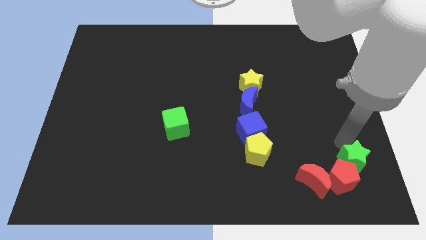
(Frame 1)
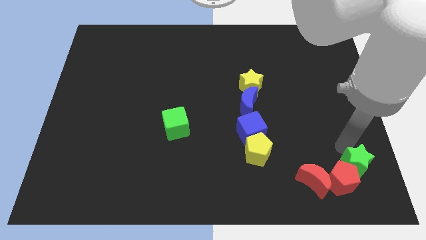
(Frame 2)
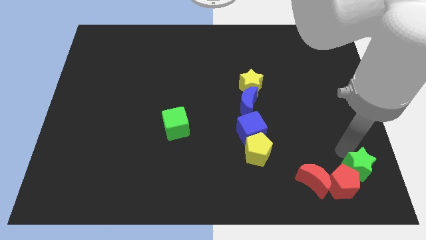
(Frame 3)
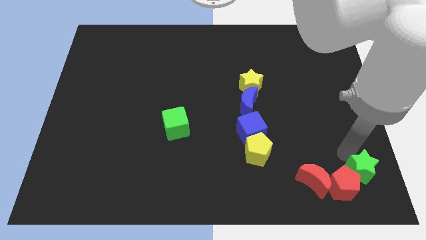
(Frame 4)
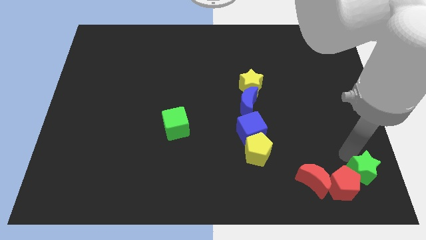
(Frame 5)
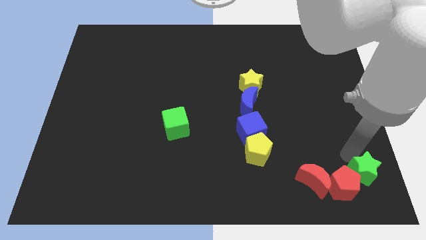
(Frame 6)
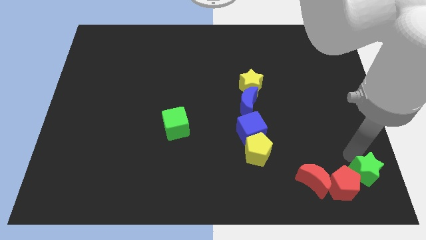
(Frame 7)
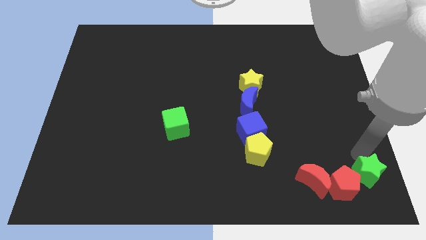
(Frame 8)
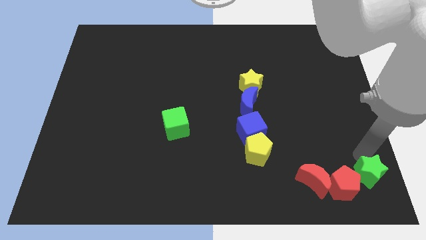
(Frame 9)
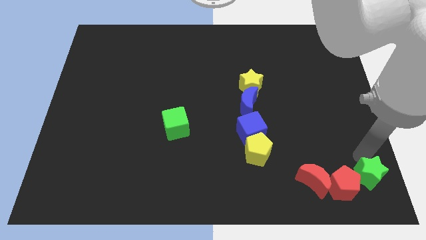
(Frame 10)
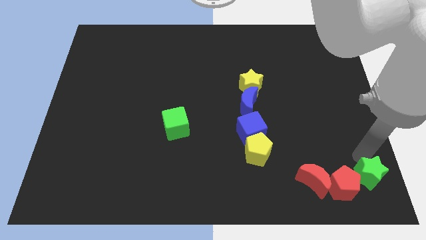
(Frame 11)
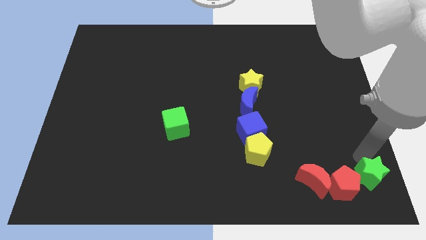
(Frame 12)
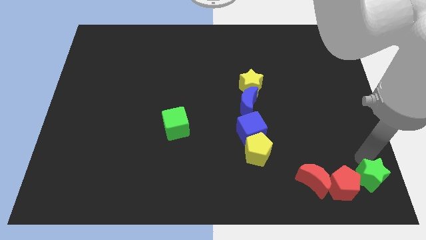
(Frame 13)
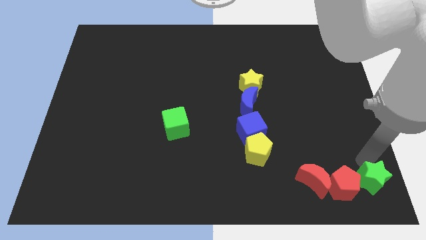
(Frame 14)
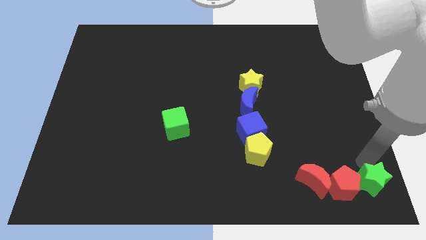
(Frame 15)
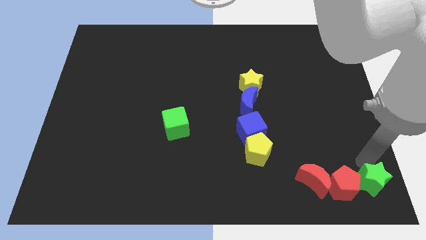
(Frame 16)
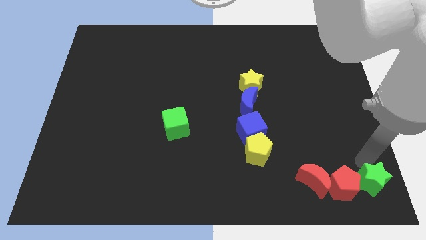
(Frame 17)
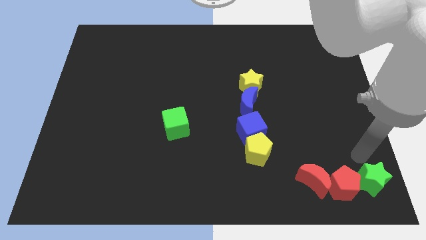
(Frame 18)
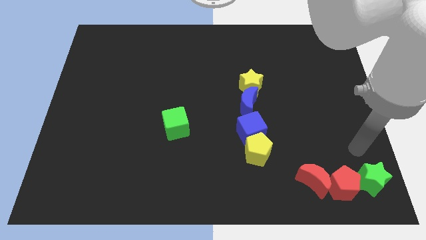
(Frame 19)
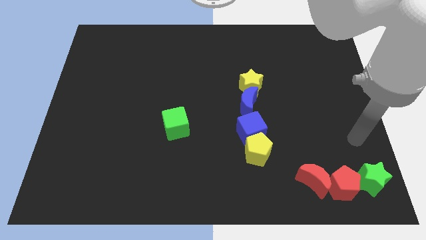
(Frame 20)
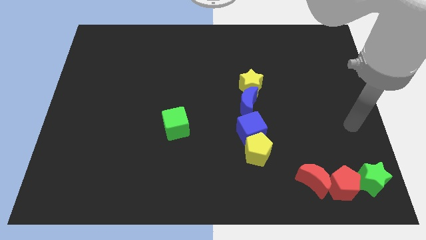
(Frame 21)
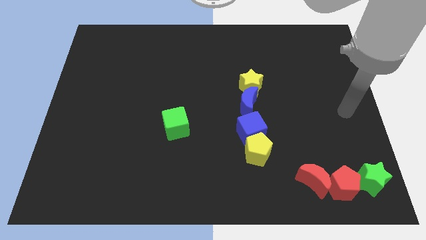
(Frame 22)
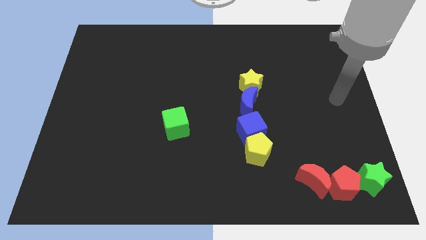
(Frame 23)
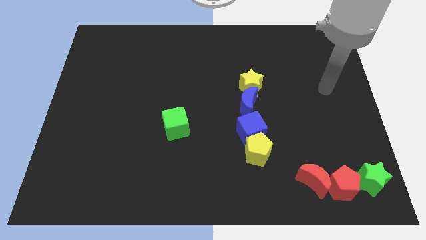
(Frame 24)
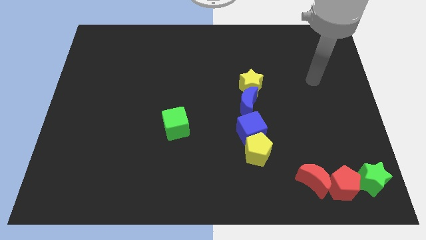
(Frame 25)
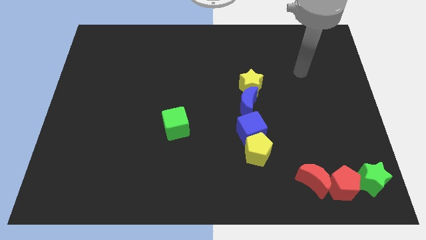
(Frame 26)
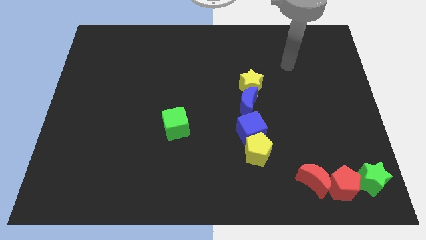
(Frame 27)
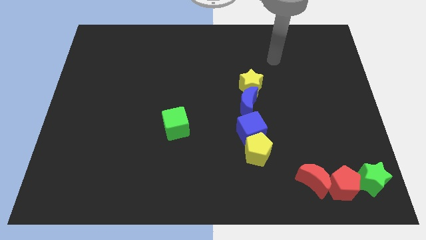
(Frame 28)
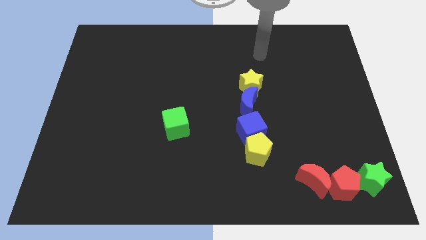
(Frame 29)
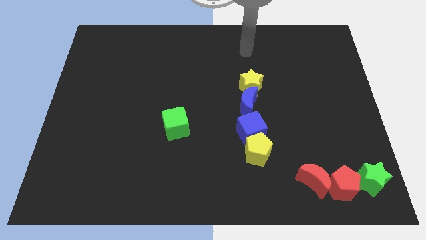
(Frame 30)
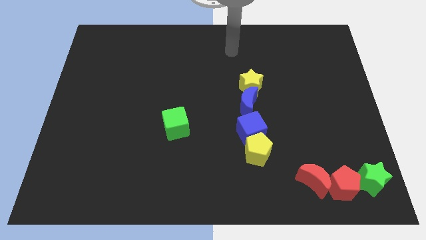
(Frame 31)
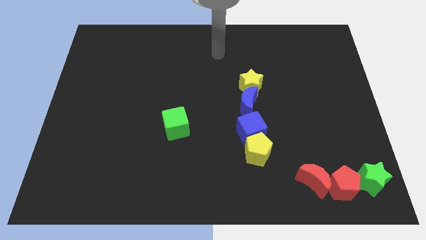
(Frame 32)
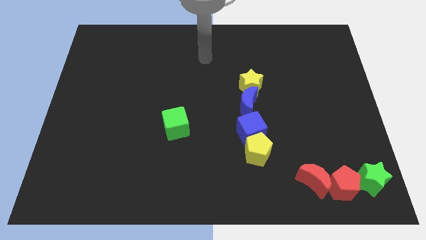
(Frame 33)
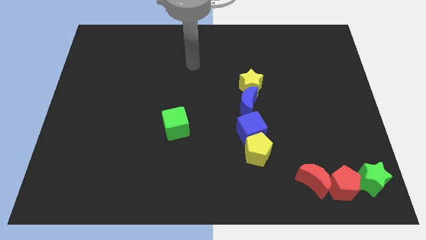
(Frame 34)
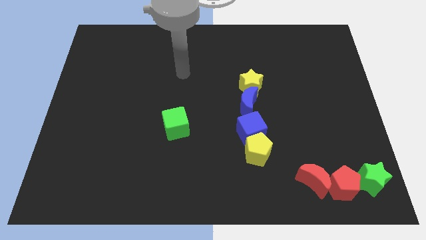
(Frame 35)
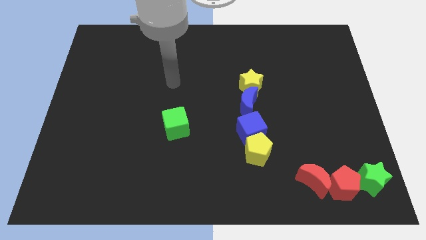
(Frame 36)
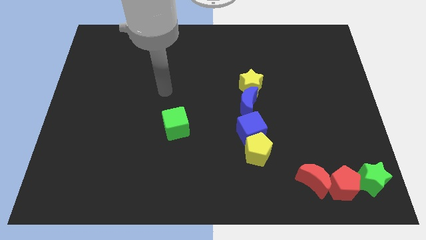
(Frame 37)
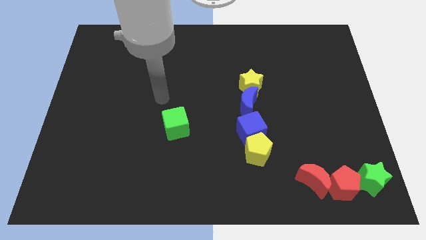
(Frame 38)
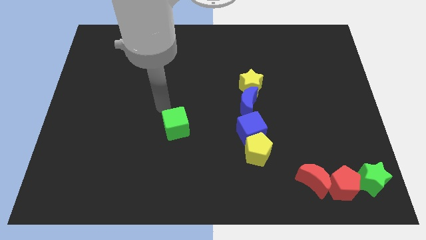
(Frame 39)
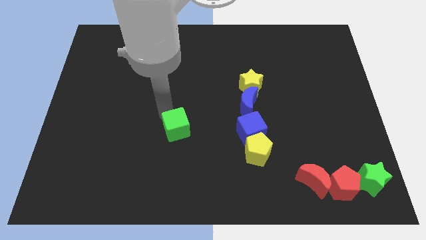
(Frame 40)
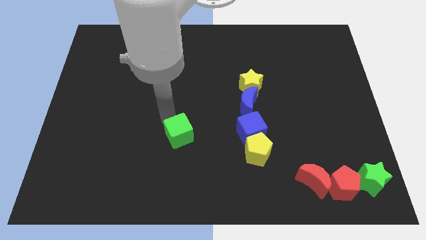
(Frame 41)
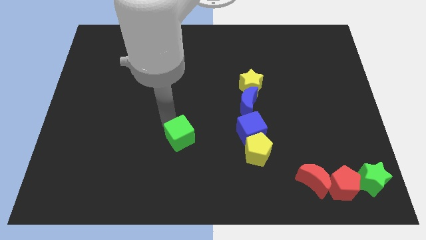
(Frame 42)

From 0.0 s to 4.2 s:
place the green star right to the red pentagon to form a horizontal line

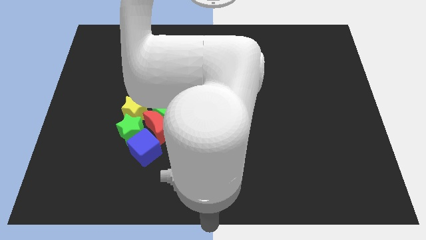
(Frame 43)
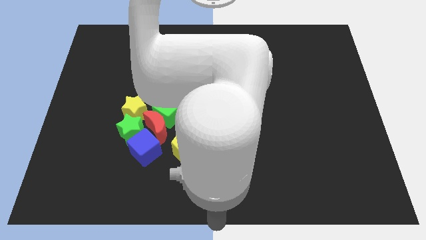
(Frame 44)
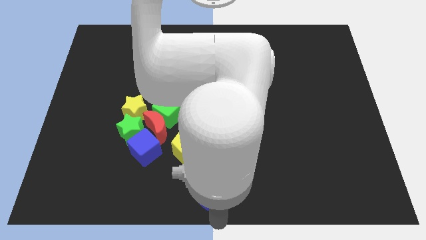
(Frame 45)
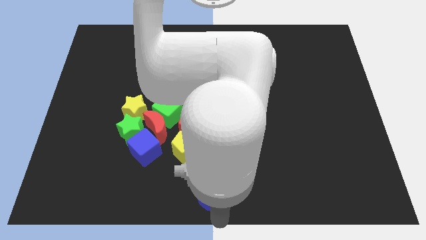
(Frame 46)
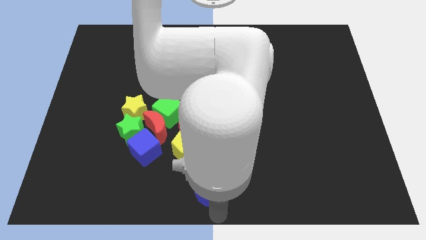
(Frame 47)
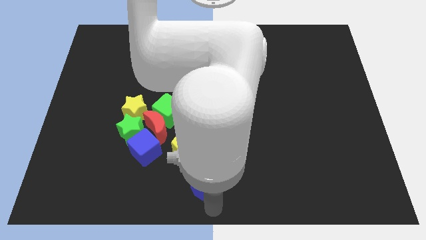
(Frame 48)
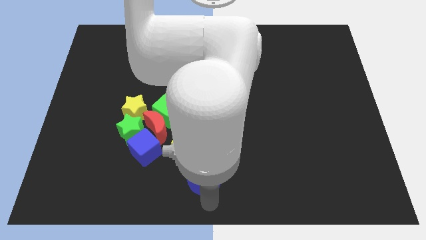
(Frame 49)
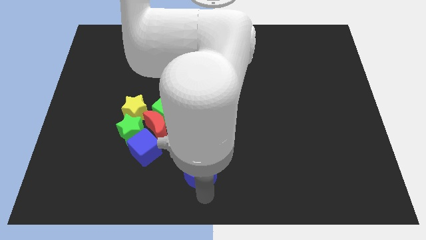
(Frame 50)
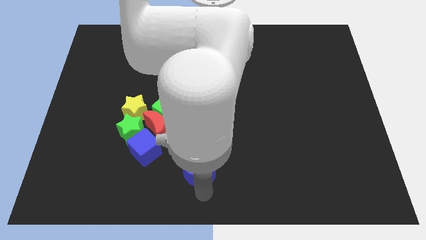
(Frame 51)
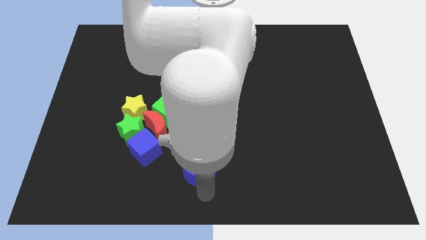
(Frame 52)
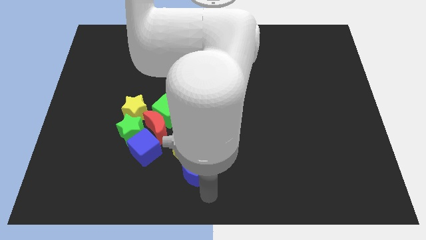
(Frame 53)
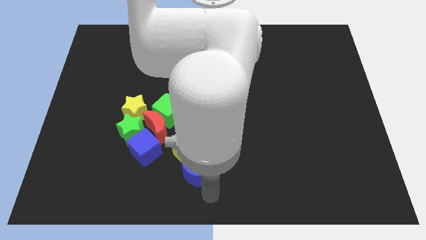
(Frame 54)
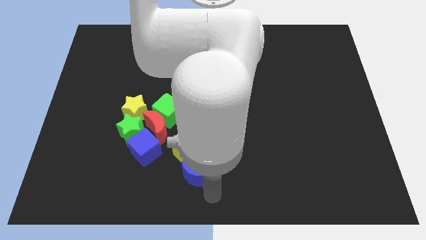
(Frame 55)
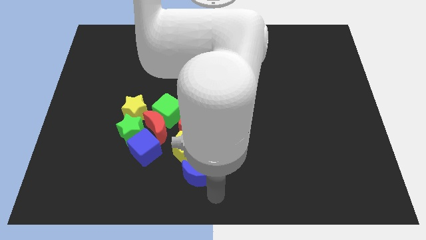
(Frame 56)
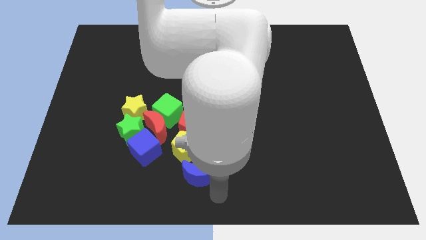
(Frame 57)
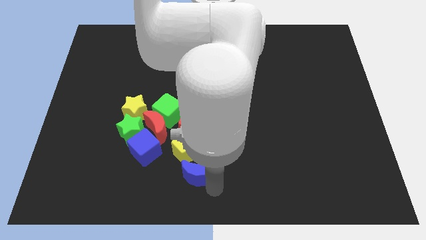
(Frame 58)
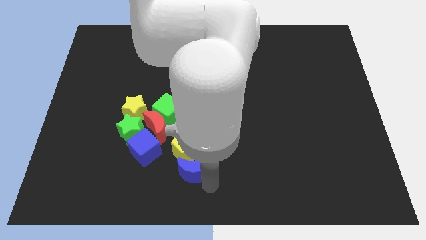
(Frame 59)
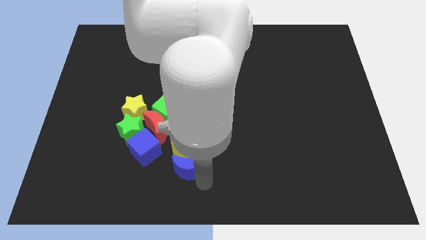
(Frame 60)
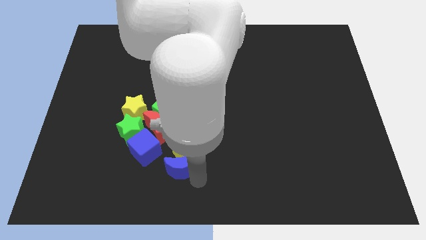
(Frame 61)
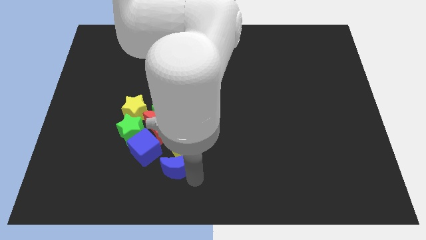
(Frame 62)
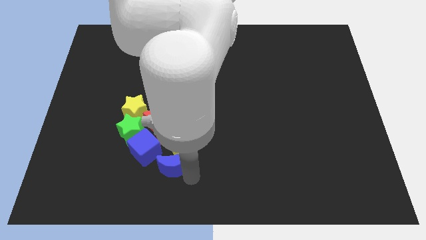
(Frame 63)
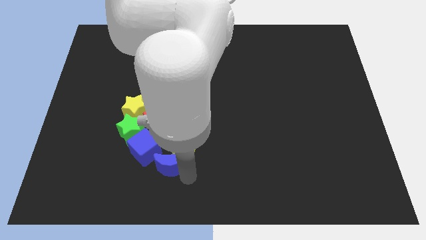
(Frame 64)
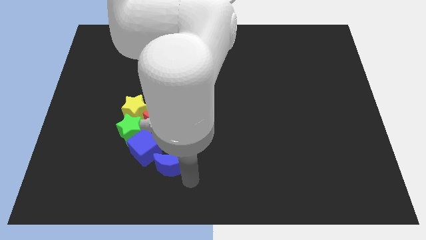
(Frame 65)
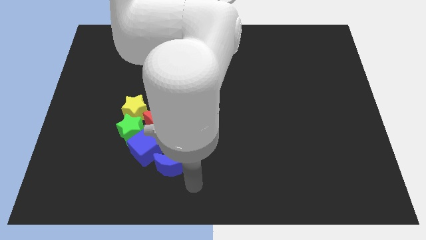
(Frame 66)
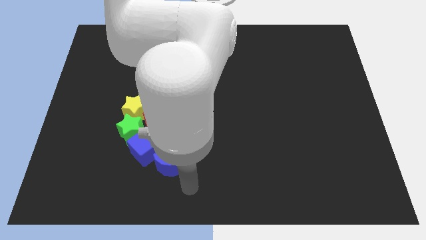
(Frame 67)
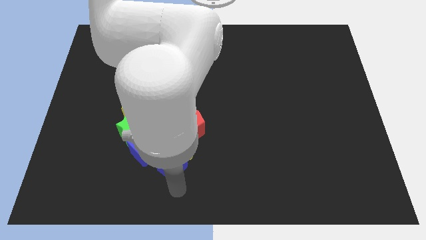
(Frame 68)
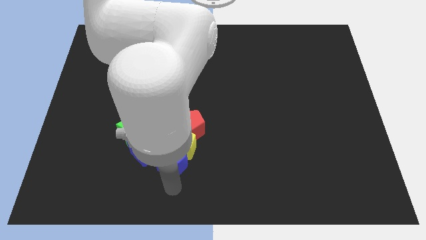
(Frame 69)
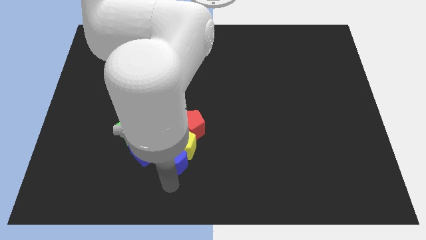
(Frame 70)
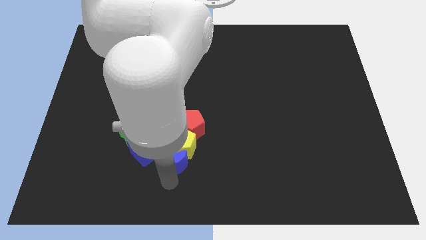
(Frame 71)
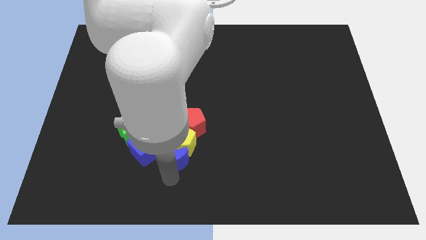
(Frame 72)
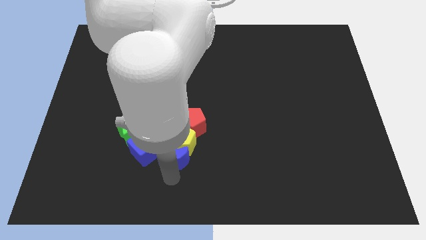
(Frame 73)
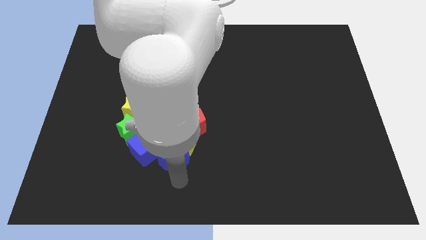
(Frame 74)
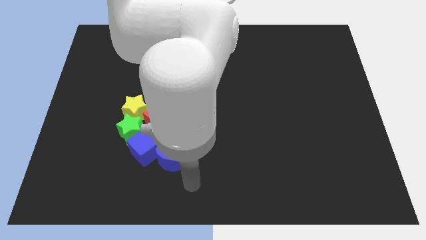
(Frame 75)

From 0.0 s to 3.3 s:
adjust the blue moon towards the group of blocks

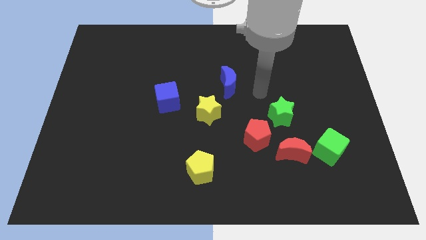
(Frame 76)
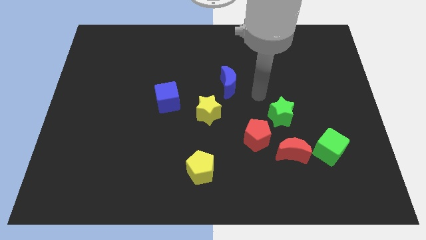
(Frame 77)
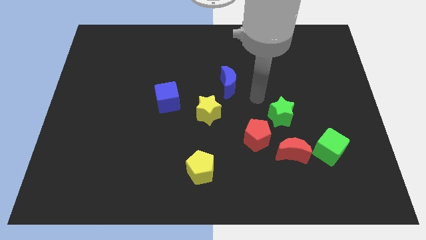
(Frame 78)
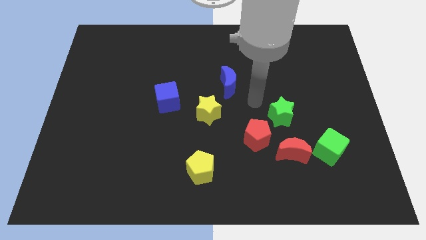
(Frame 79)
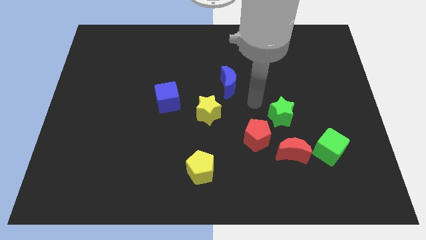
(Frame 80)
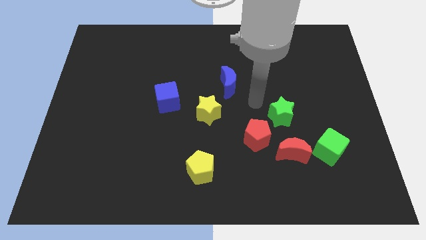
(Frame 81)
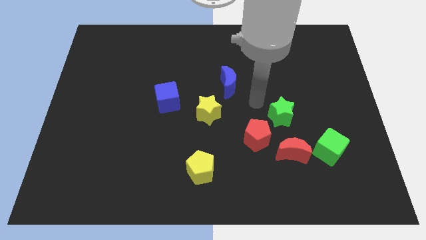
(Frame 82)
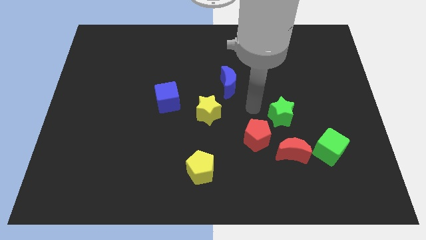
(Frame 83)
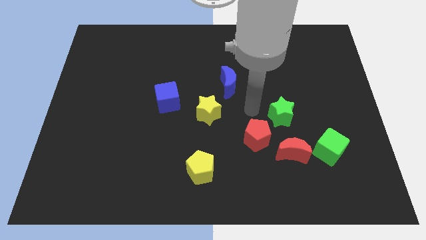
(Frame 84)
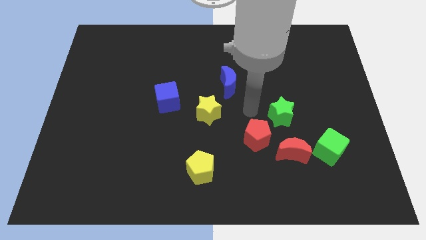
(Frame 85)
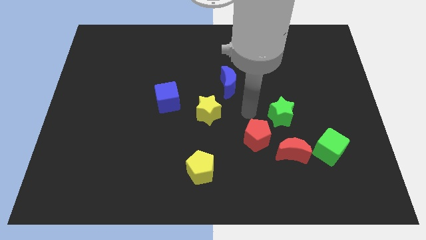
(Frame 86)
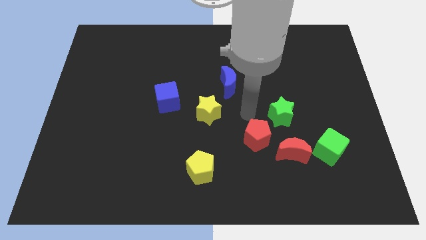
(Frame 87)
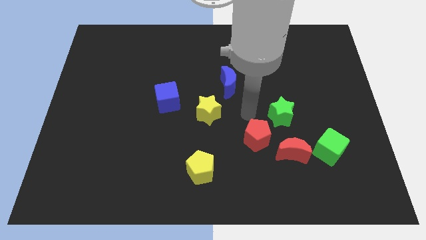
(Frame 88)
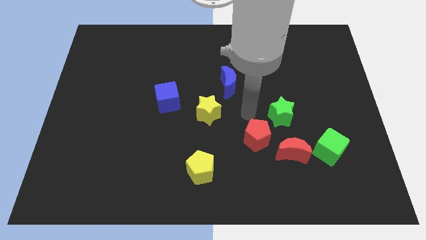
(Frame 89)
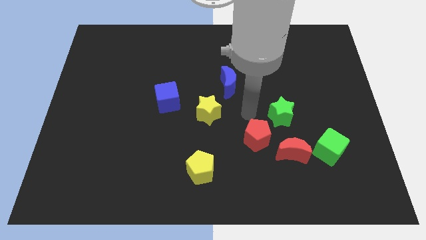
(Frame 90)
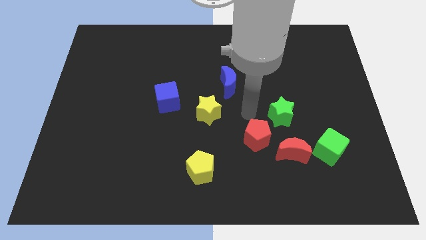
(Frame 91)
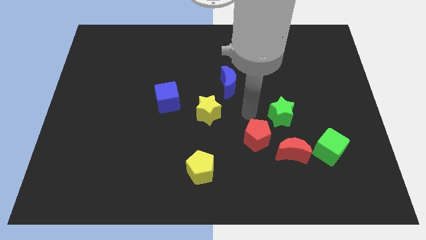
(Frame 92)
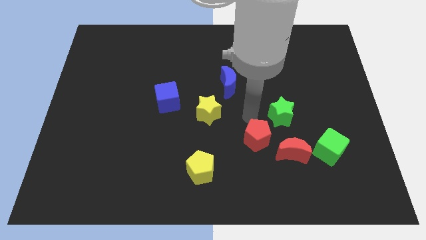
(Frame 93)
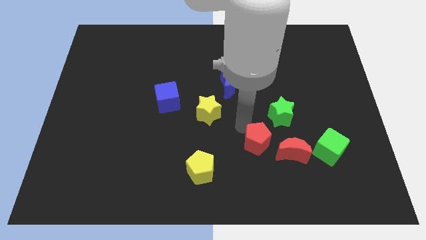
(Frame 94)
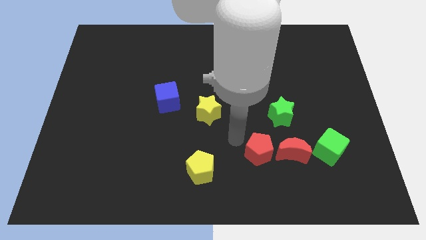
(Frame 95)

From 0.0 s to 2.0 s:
hit the red pentagon
